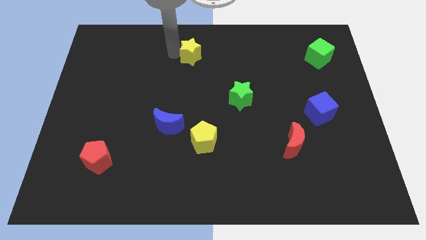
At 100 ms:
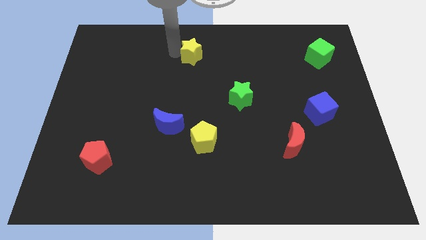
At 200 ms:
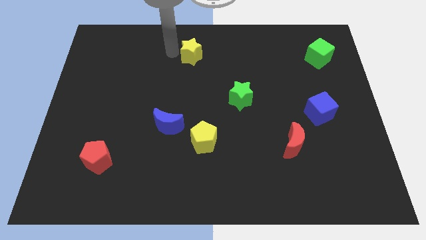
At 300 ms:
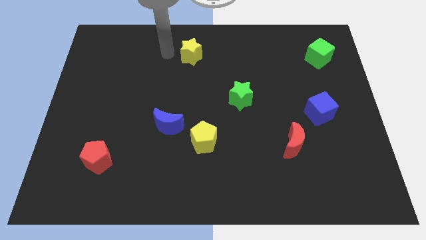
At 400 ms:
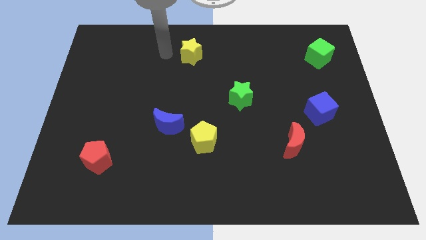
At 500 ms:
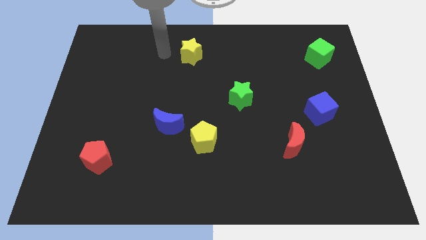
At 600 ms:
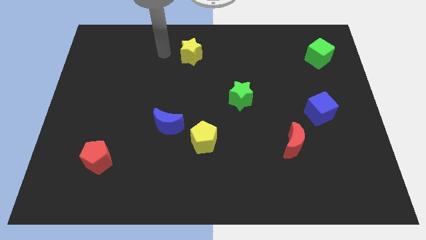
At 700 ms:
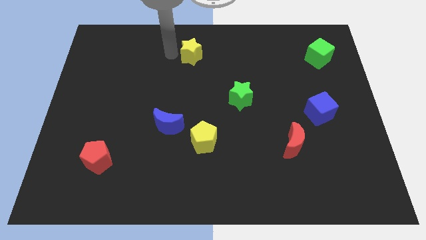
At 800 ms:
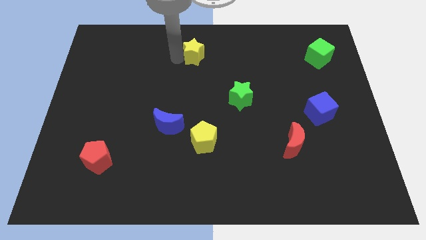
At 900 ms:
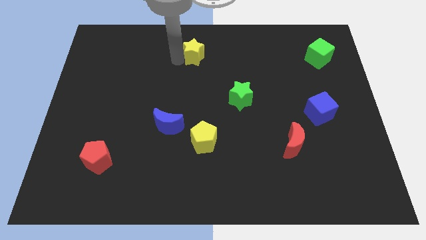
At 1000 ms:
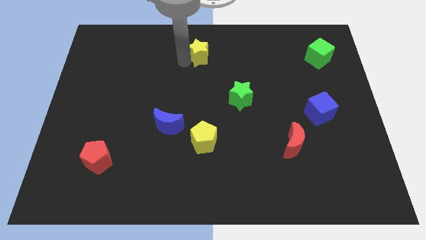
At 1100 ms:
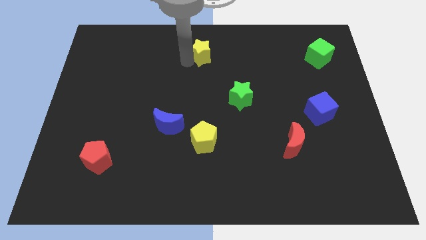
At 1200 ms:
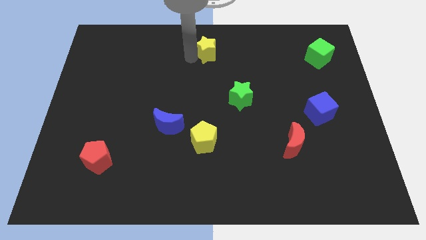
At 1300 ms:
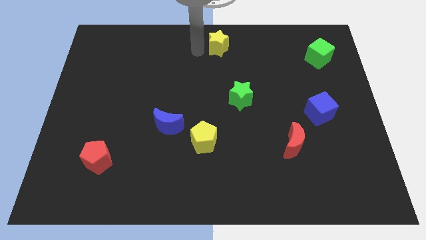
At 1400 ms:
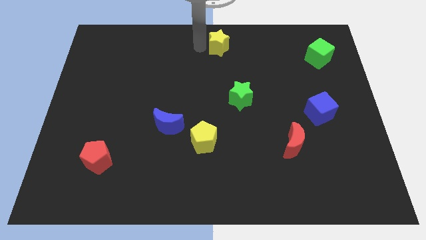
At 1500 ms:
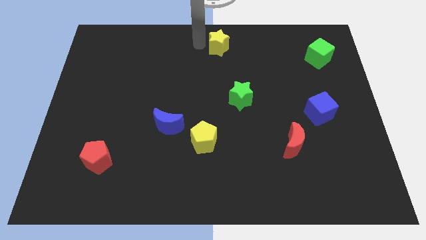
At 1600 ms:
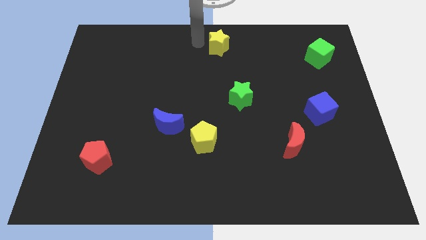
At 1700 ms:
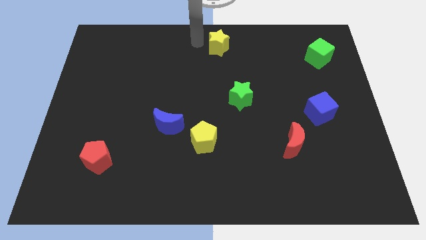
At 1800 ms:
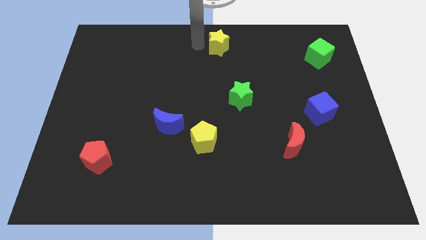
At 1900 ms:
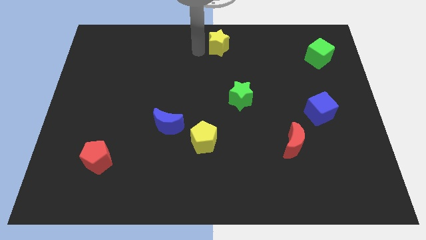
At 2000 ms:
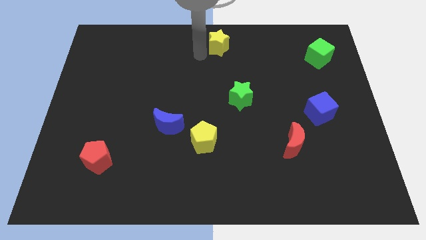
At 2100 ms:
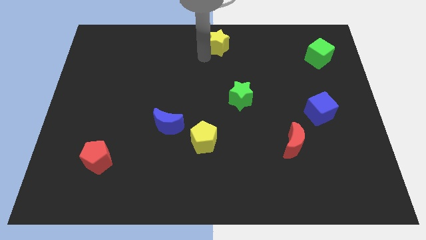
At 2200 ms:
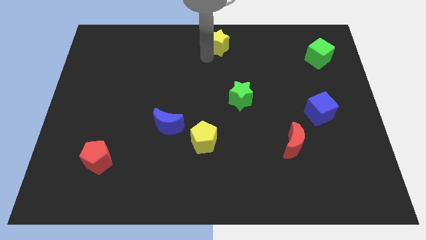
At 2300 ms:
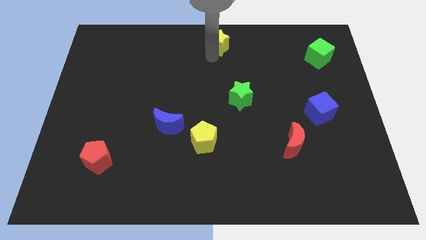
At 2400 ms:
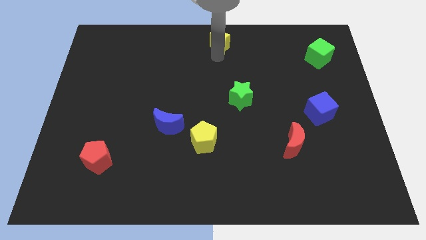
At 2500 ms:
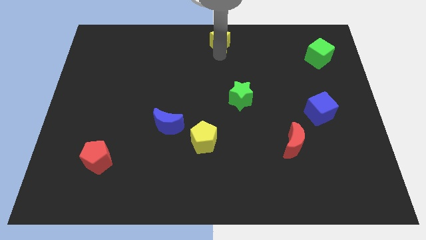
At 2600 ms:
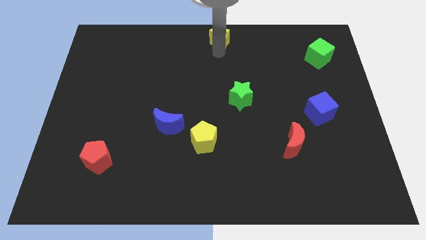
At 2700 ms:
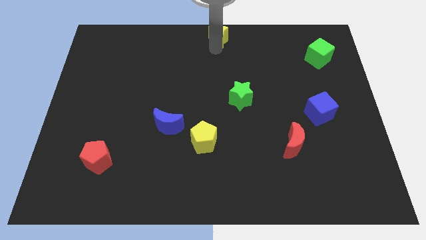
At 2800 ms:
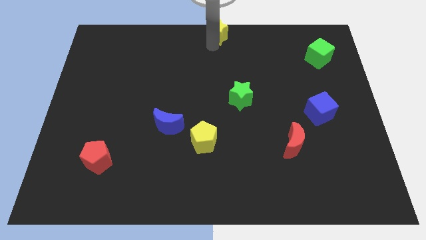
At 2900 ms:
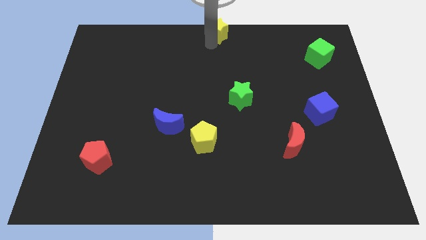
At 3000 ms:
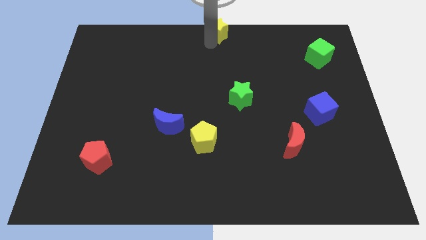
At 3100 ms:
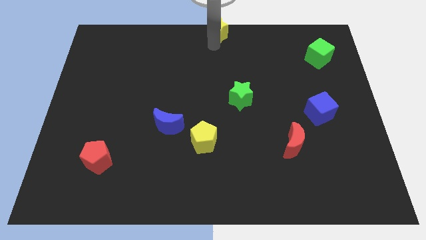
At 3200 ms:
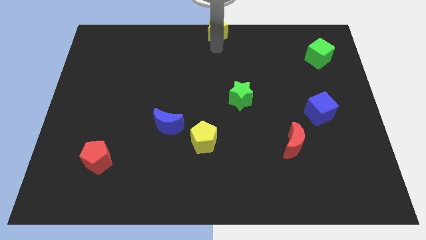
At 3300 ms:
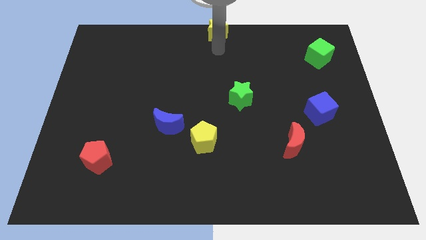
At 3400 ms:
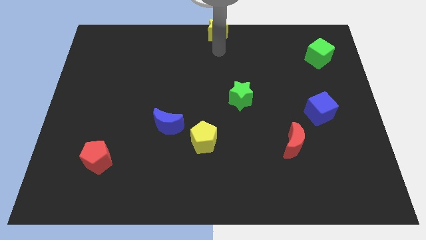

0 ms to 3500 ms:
place the yellow star to top center of the board

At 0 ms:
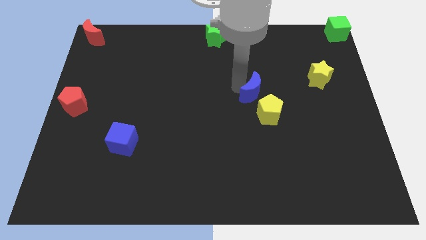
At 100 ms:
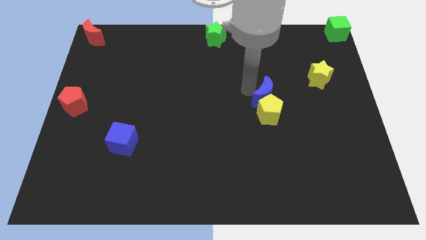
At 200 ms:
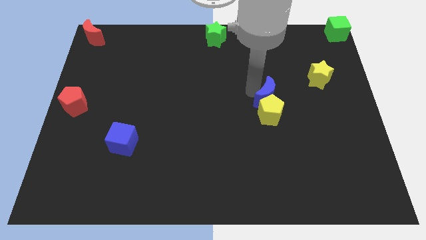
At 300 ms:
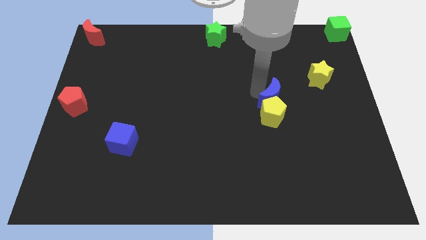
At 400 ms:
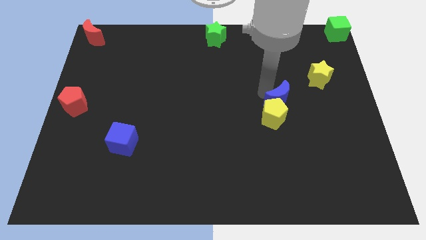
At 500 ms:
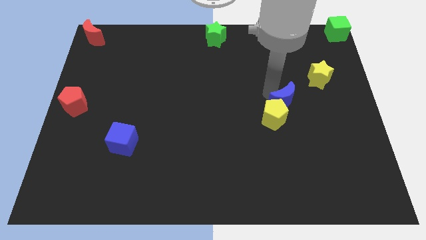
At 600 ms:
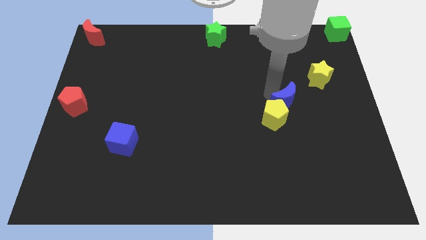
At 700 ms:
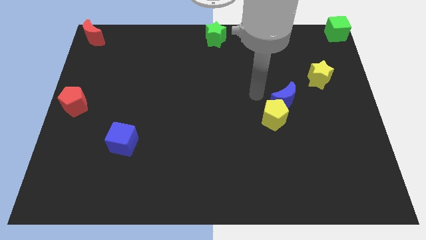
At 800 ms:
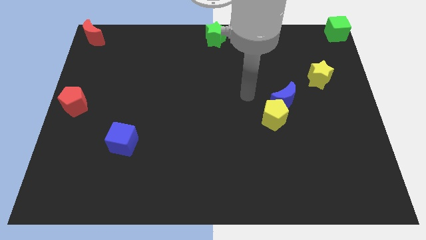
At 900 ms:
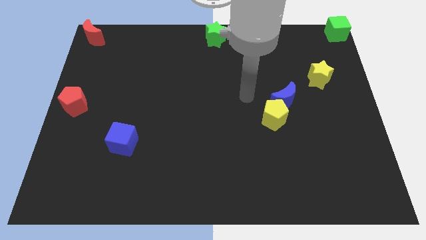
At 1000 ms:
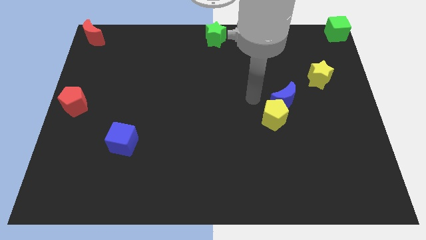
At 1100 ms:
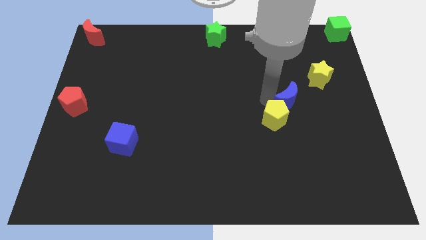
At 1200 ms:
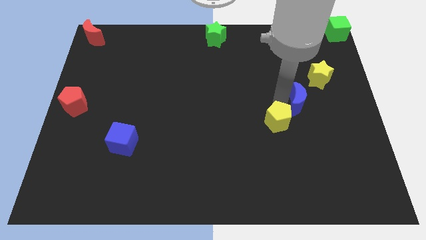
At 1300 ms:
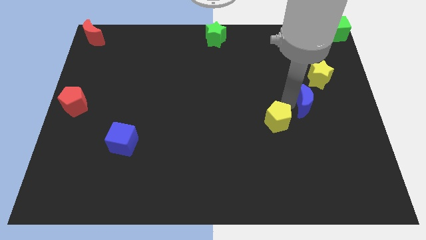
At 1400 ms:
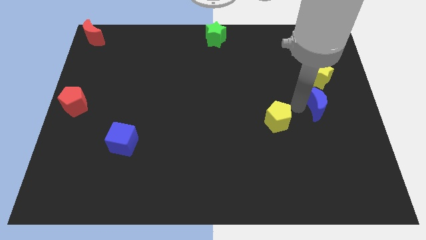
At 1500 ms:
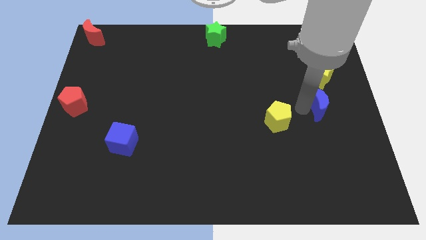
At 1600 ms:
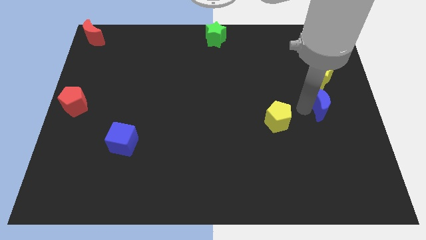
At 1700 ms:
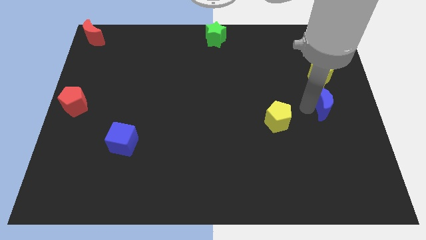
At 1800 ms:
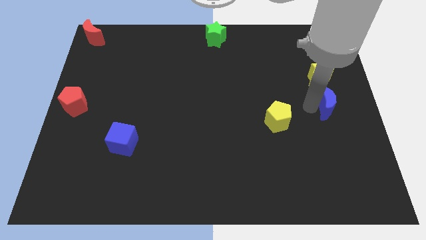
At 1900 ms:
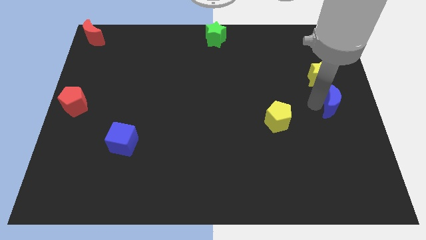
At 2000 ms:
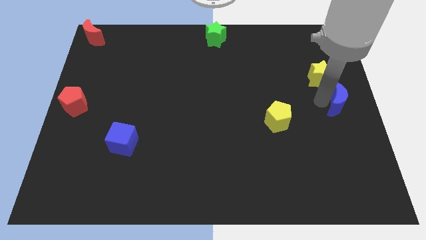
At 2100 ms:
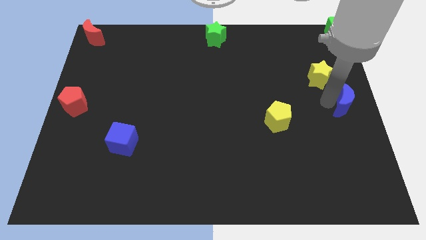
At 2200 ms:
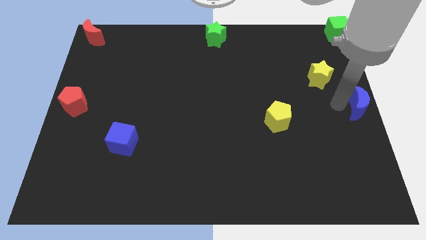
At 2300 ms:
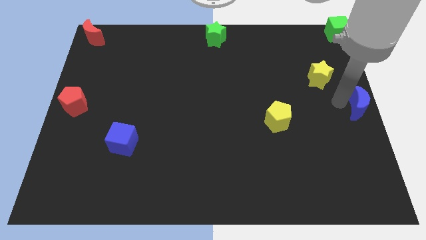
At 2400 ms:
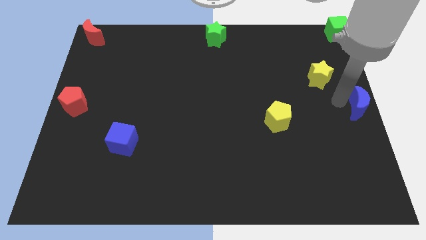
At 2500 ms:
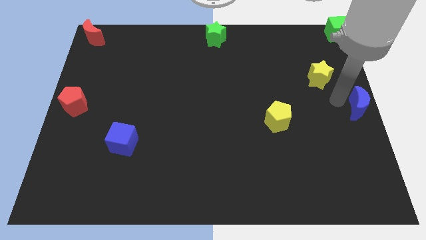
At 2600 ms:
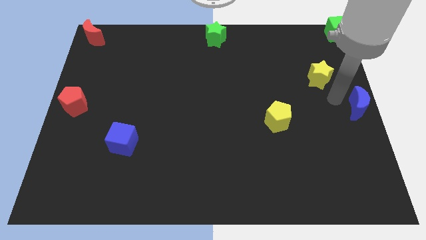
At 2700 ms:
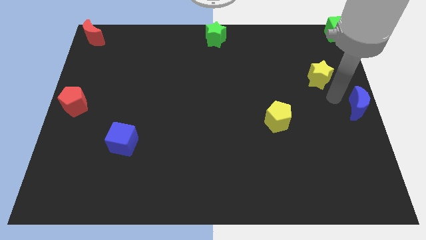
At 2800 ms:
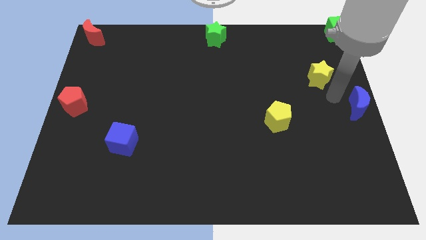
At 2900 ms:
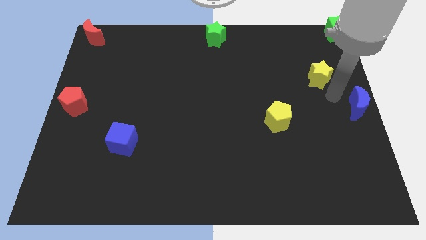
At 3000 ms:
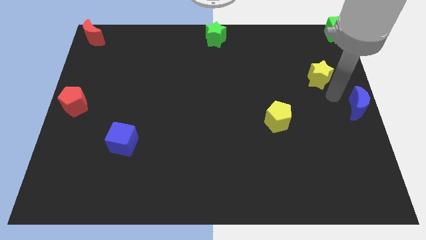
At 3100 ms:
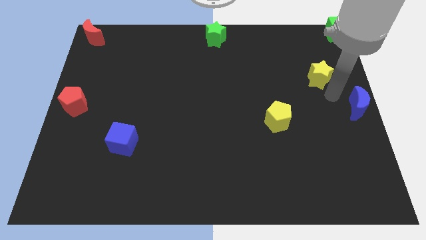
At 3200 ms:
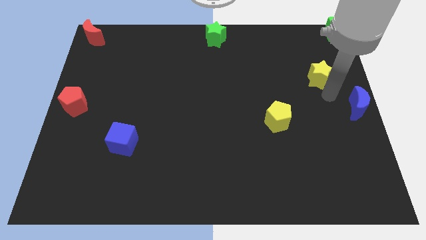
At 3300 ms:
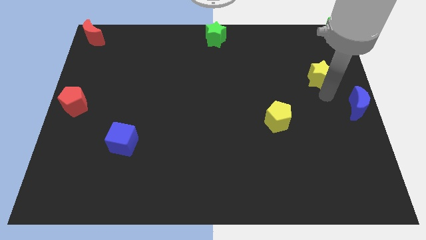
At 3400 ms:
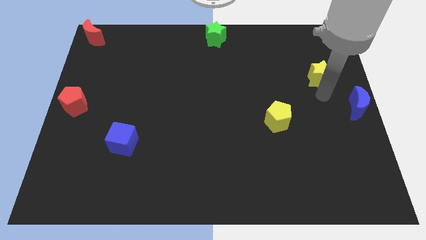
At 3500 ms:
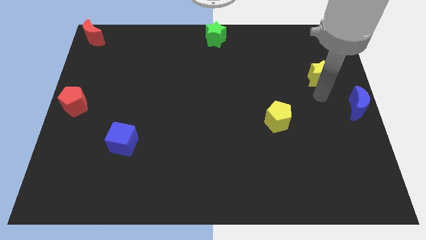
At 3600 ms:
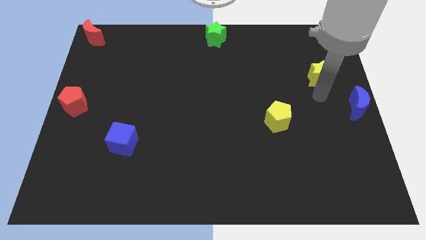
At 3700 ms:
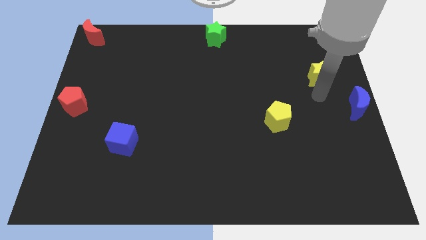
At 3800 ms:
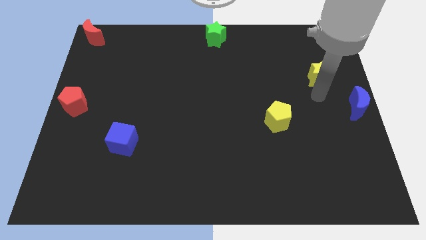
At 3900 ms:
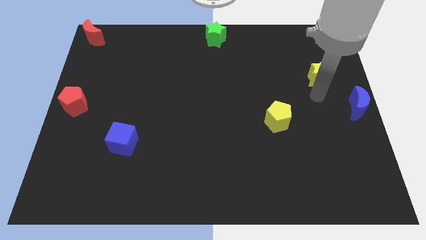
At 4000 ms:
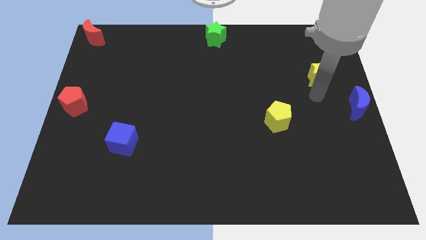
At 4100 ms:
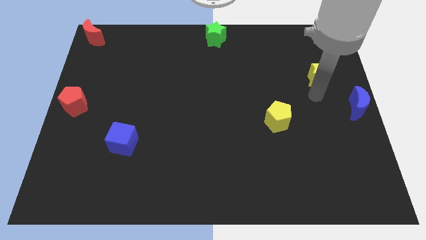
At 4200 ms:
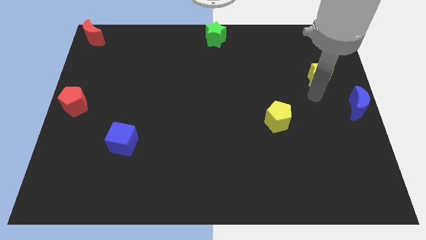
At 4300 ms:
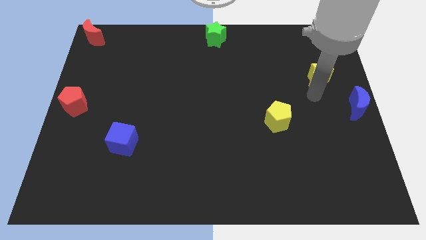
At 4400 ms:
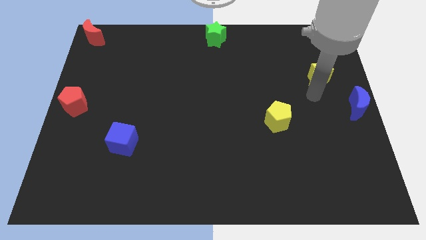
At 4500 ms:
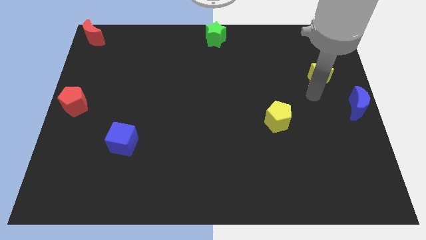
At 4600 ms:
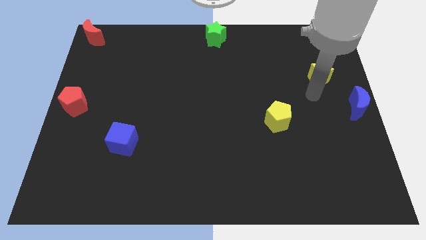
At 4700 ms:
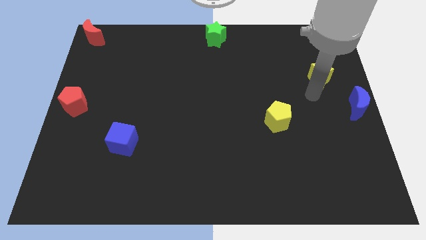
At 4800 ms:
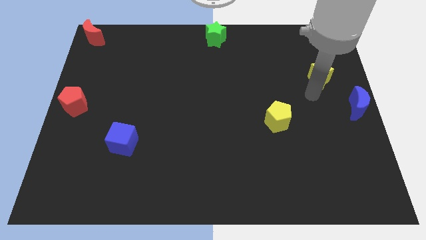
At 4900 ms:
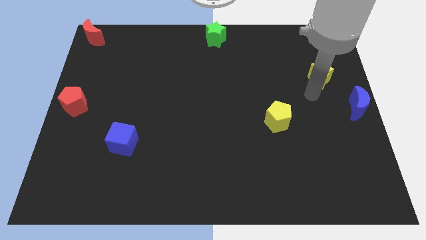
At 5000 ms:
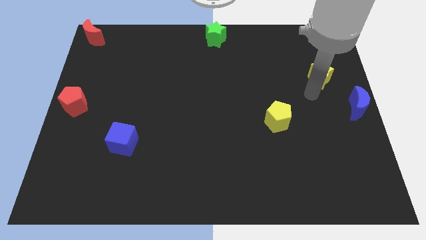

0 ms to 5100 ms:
move the blue crescent to the right center of the board

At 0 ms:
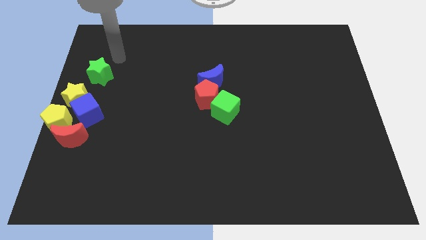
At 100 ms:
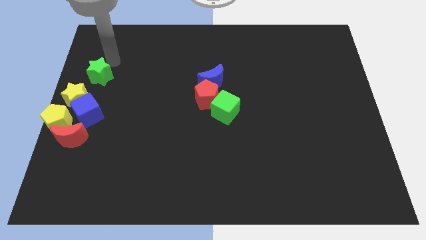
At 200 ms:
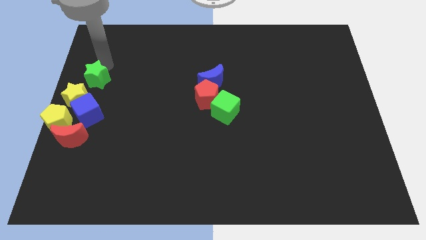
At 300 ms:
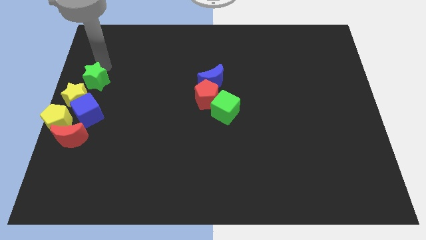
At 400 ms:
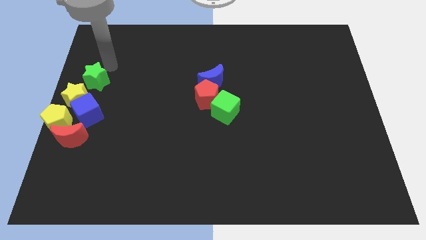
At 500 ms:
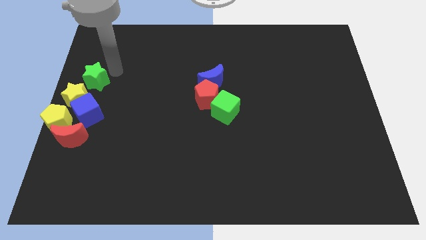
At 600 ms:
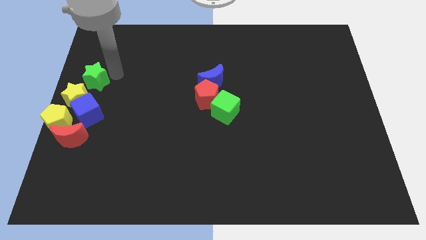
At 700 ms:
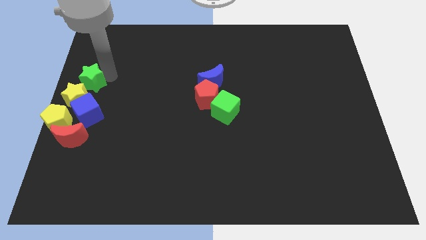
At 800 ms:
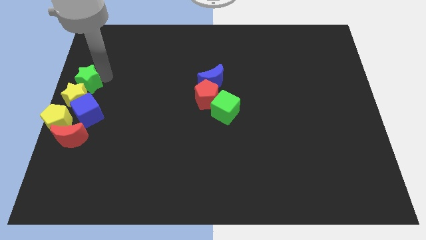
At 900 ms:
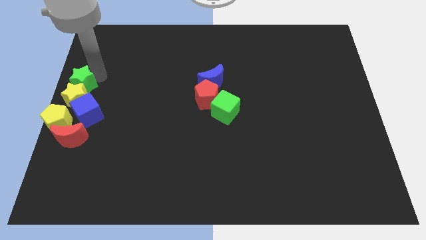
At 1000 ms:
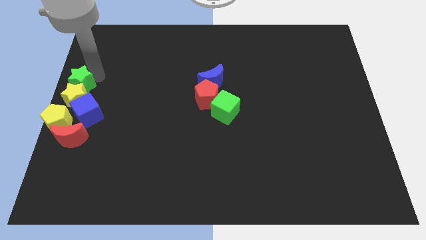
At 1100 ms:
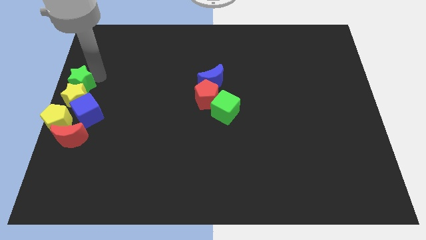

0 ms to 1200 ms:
arrange the green star on the top of the yellow star
